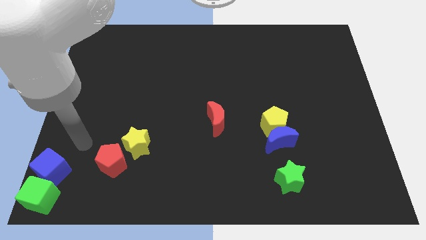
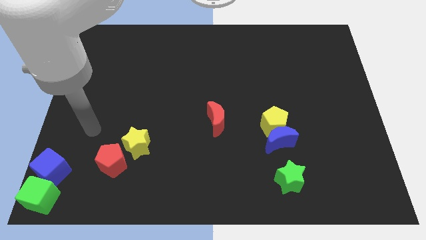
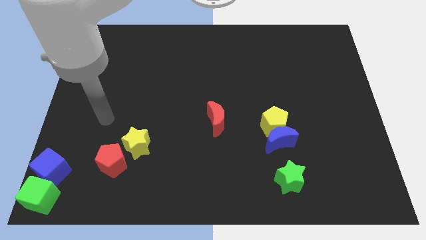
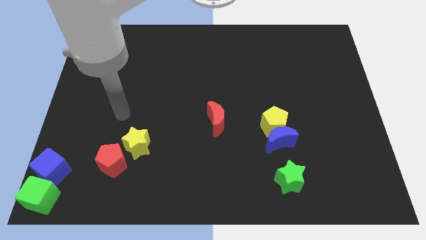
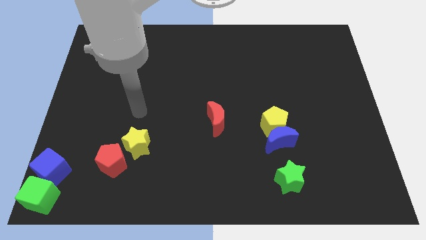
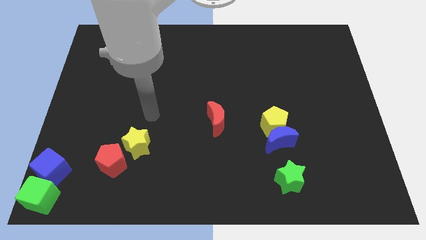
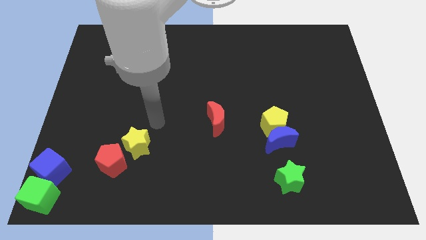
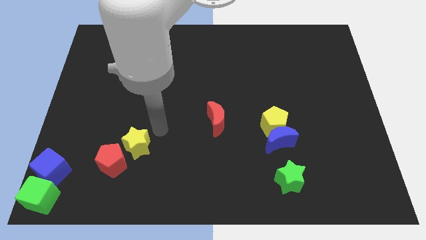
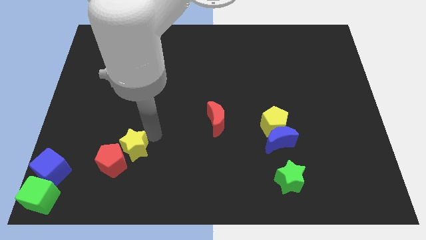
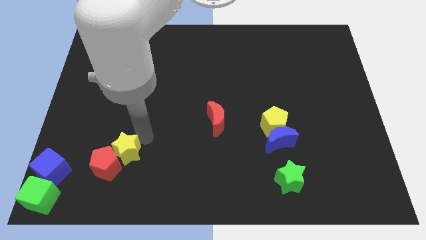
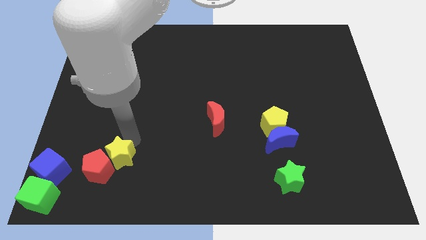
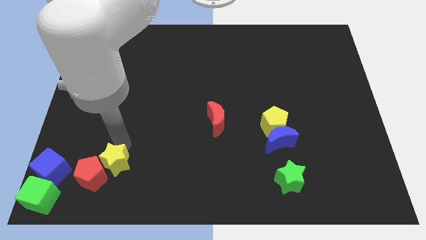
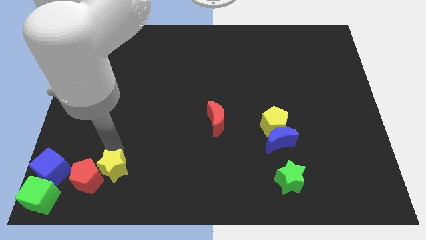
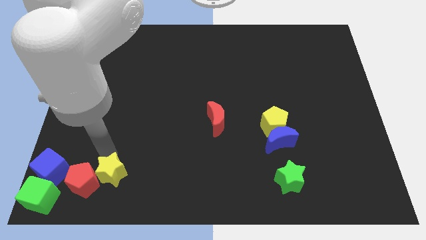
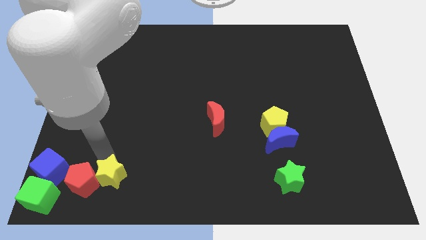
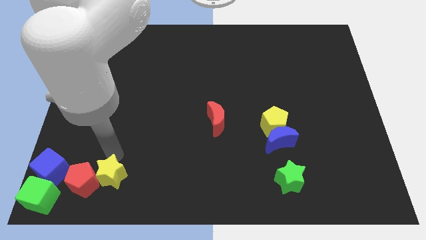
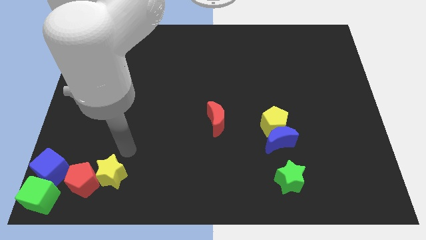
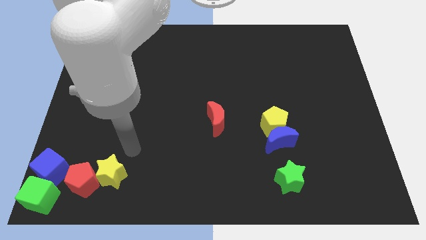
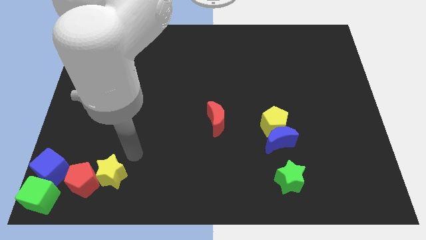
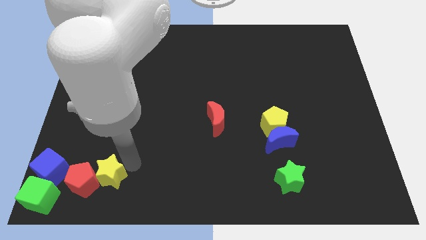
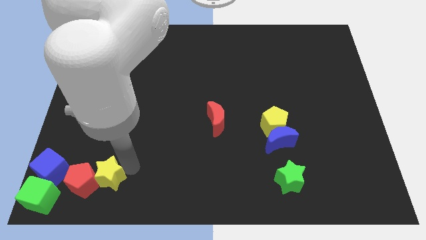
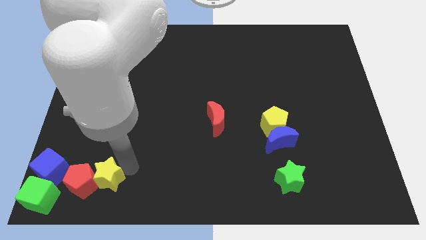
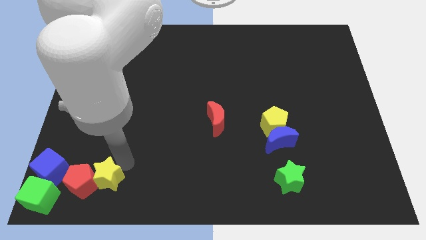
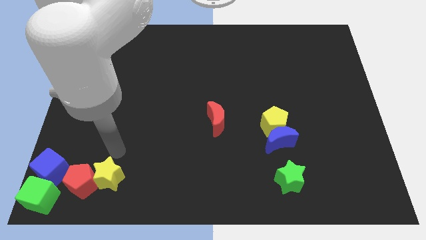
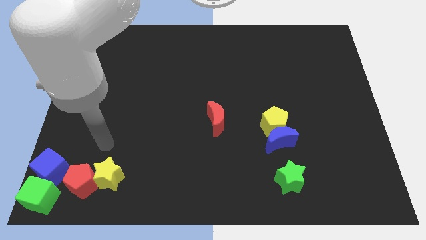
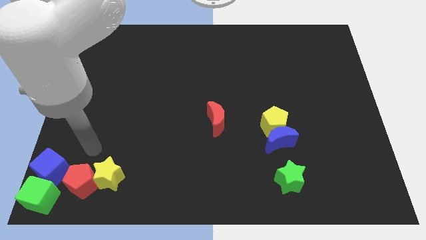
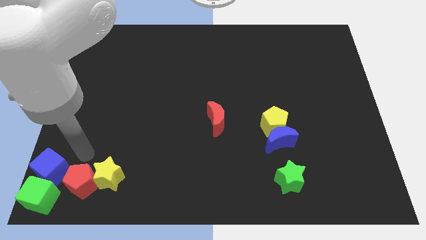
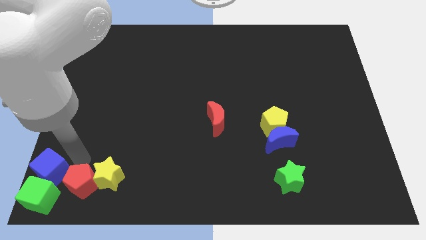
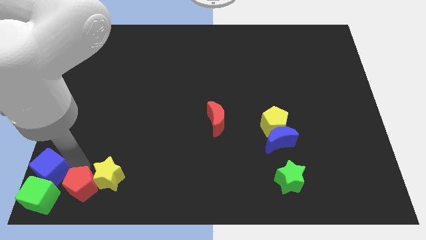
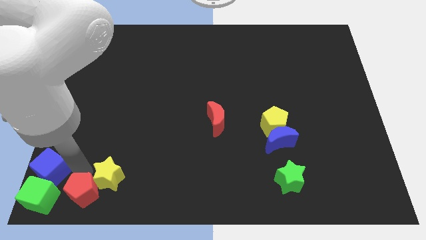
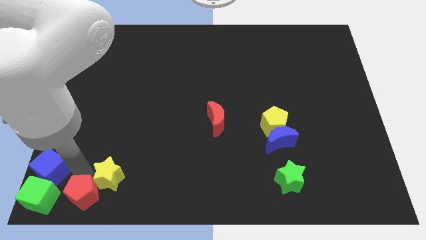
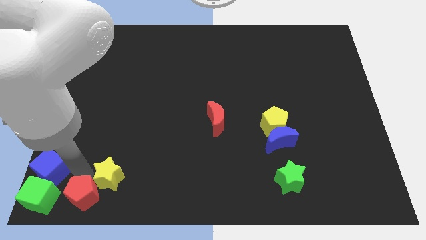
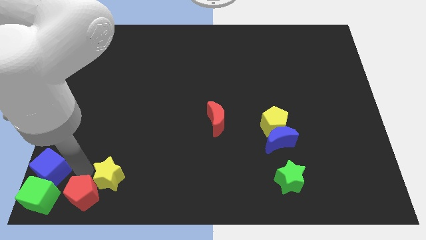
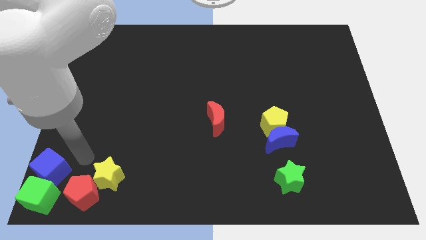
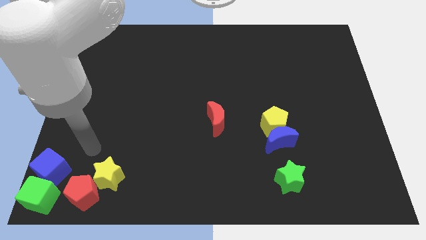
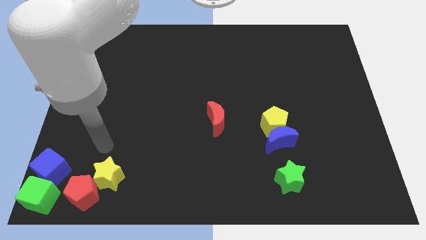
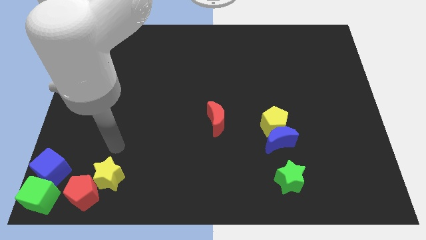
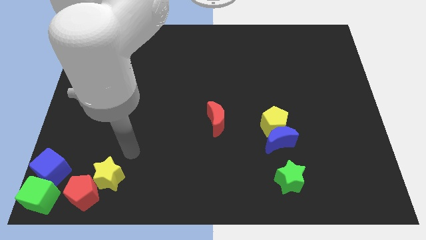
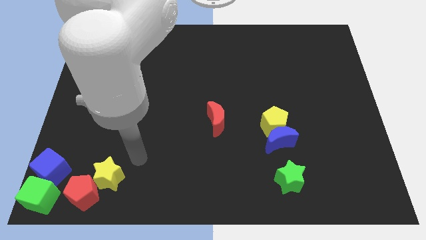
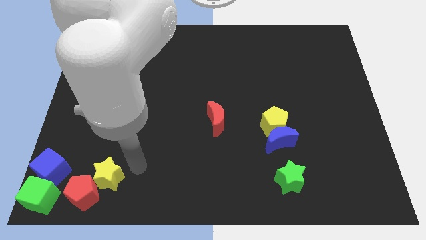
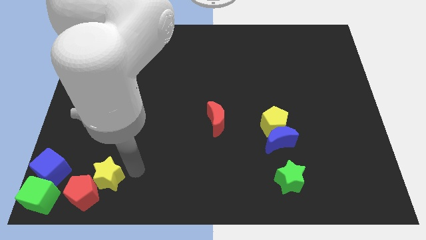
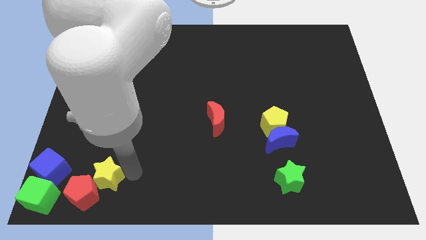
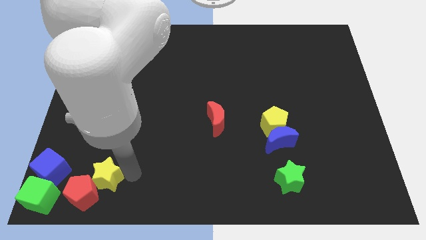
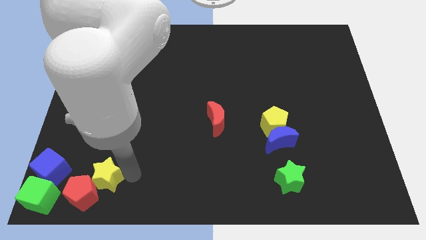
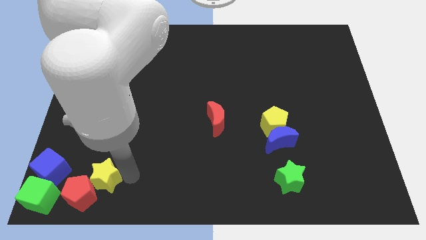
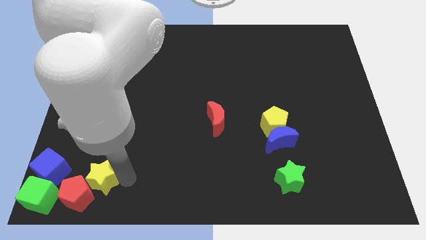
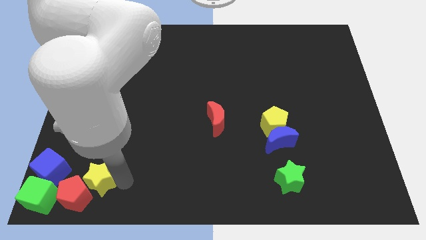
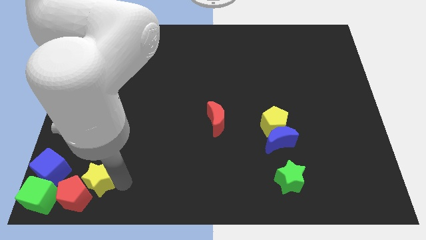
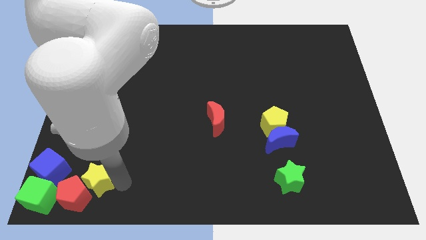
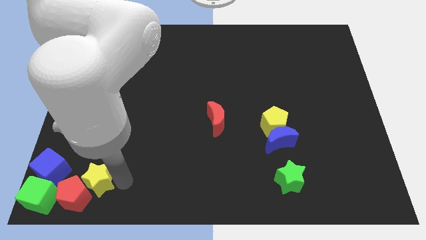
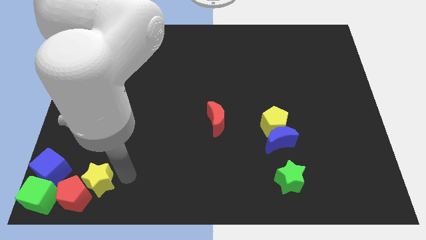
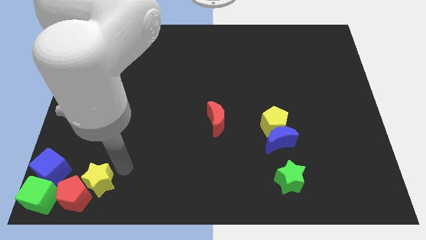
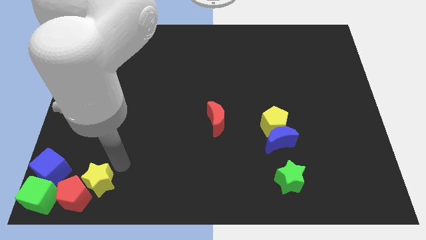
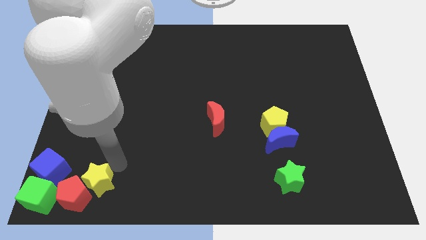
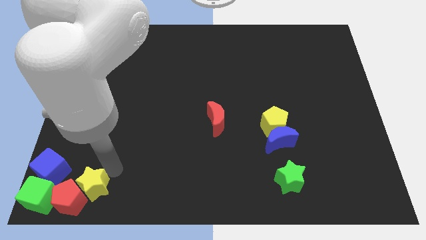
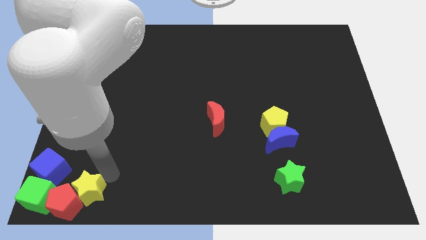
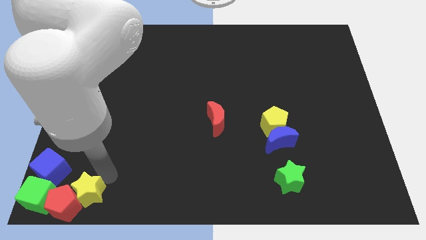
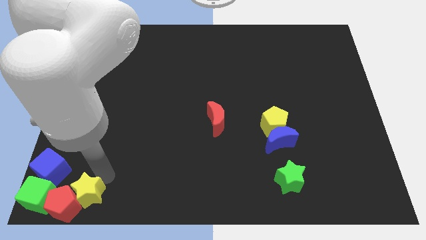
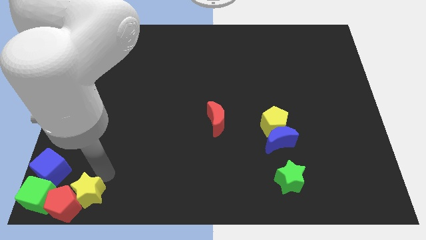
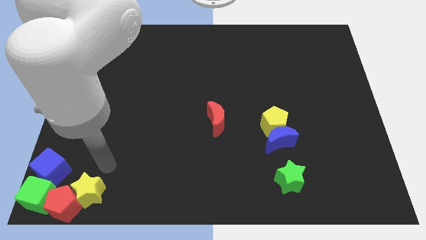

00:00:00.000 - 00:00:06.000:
move the red pentagon and yellow star to the bottom left side of the board

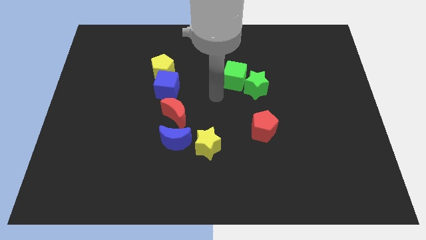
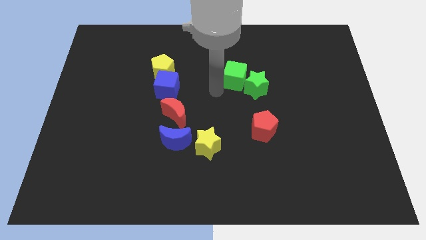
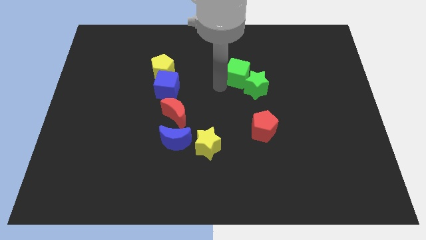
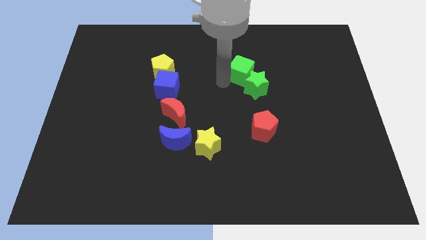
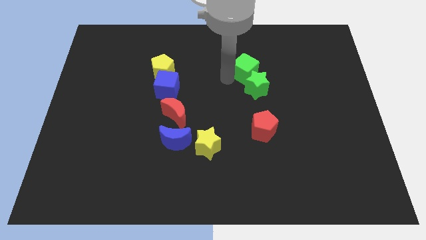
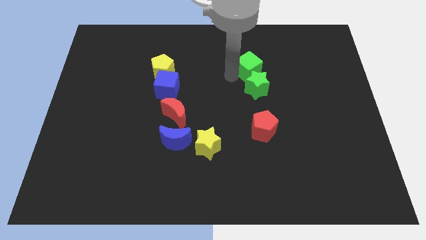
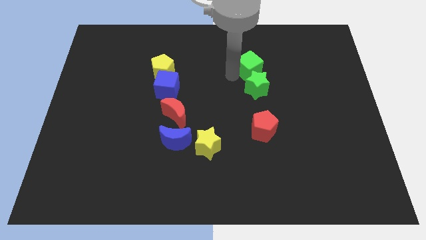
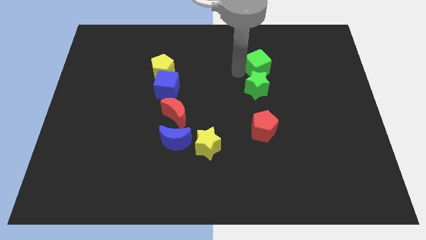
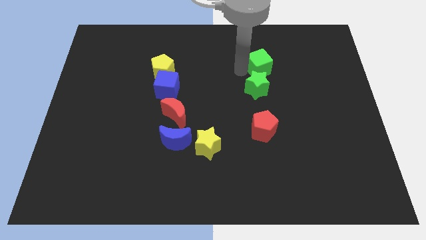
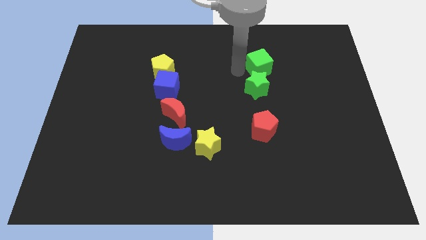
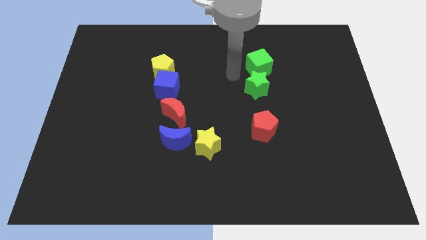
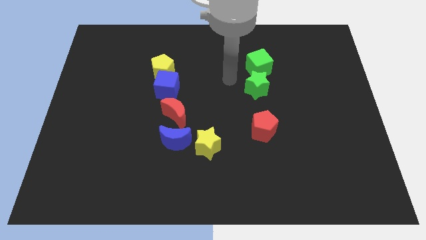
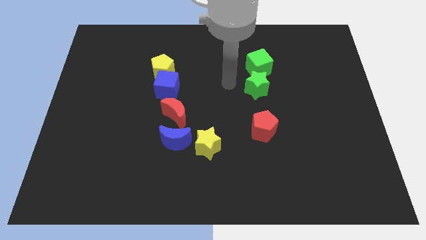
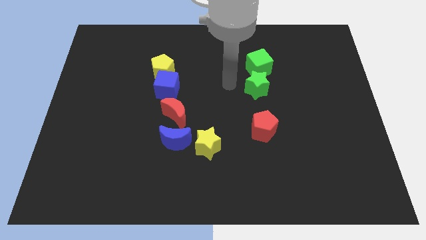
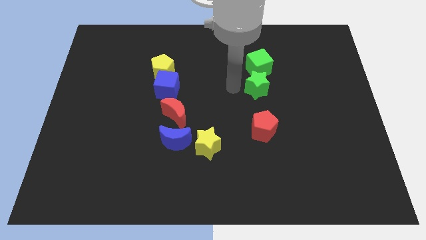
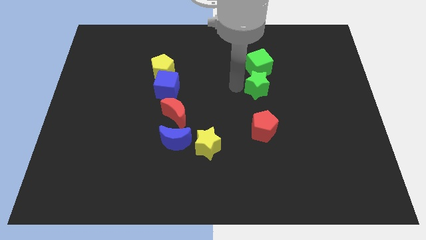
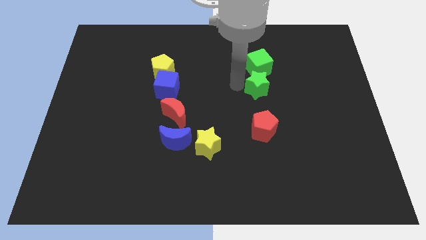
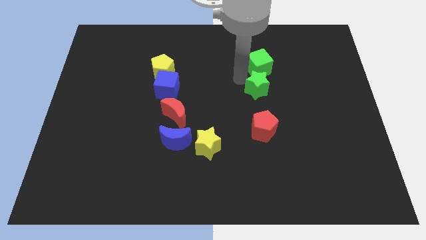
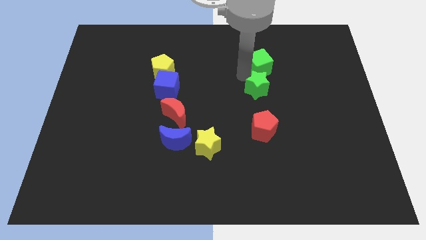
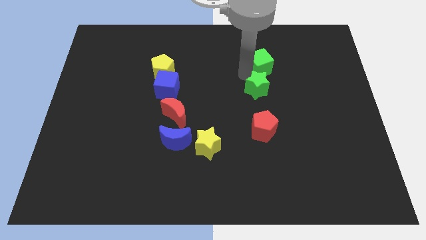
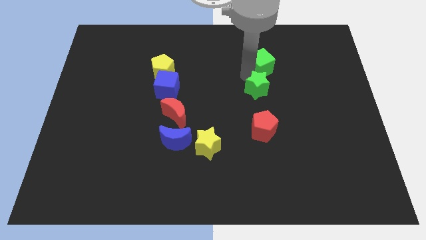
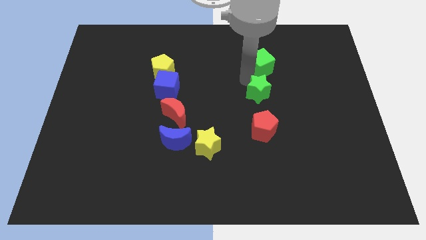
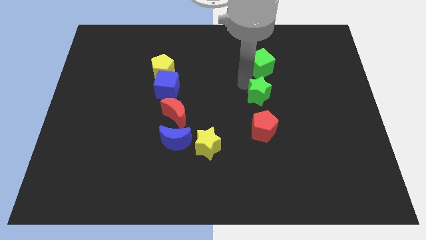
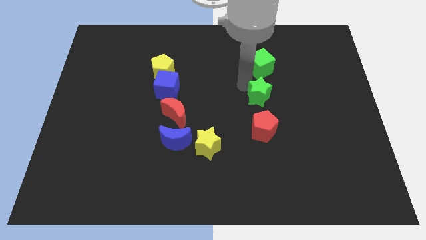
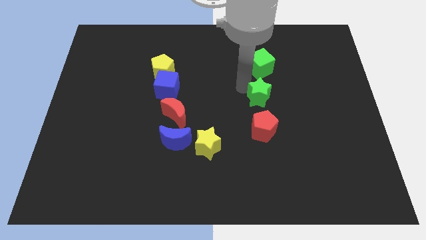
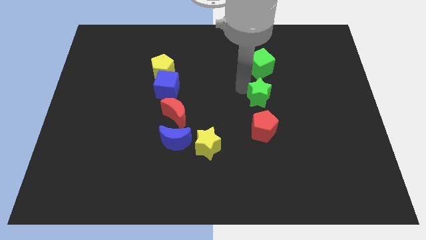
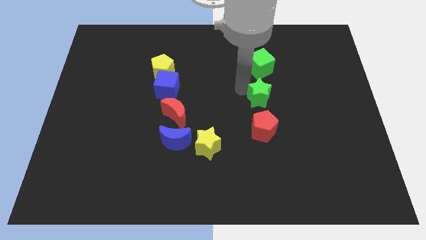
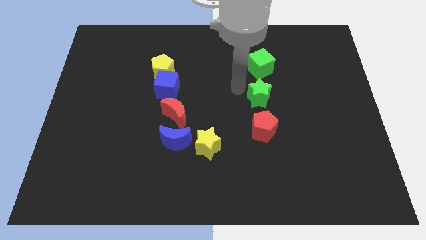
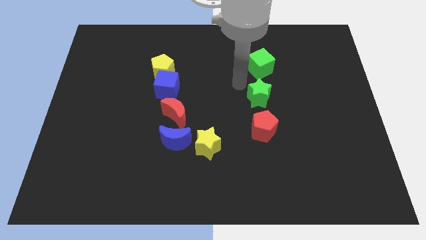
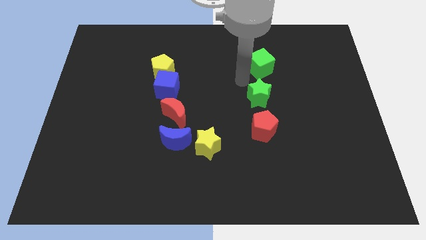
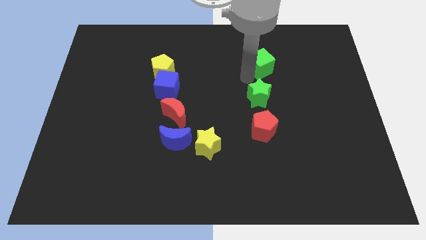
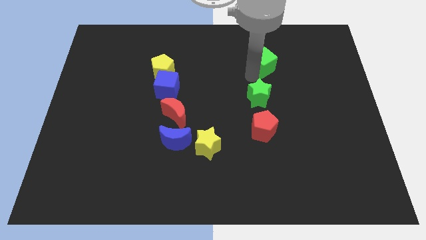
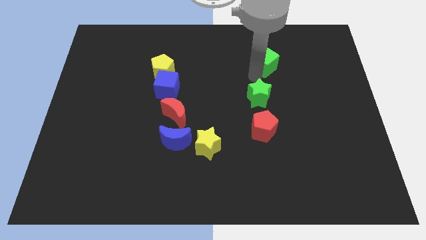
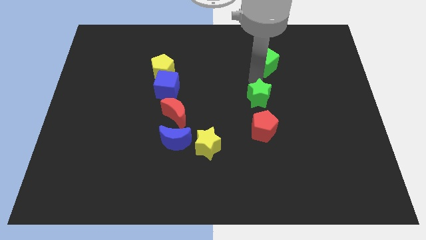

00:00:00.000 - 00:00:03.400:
place your hand in between the green cube and green star
